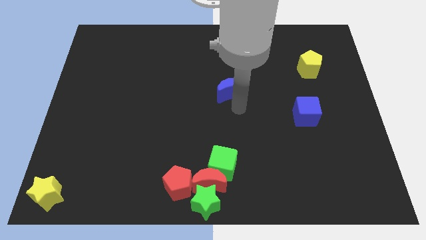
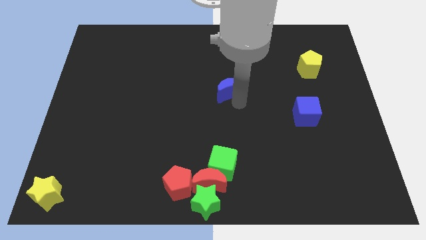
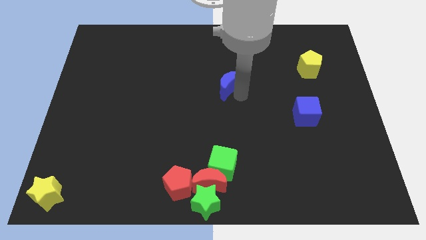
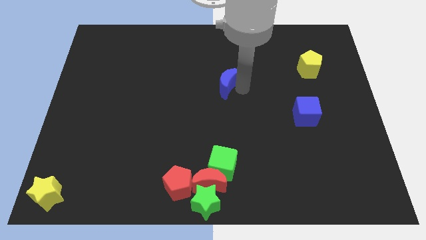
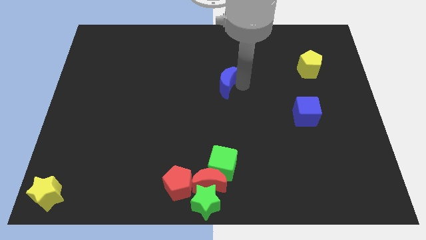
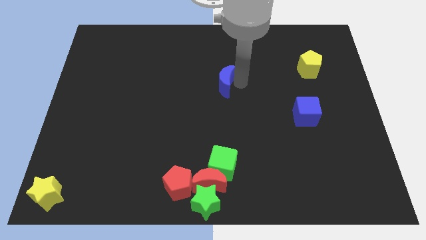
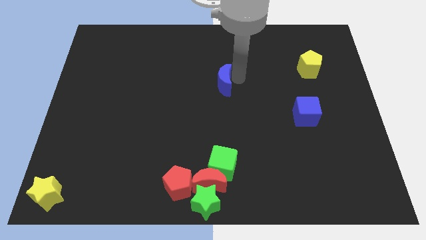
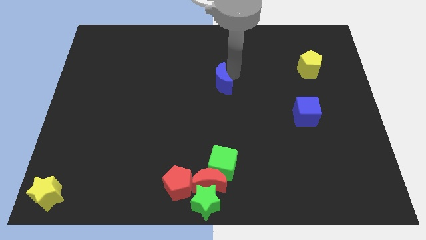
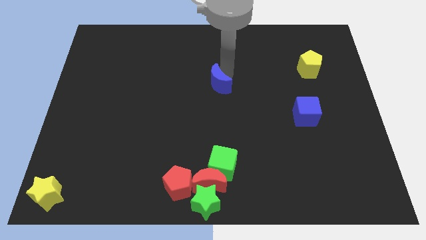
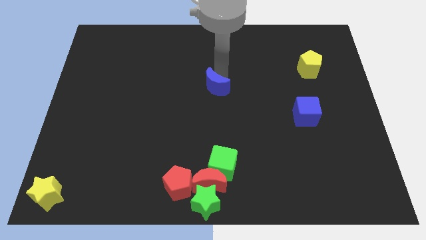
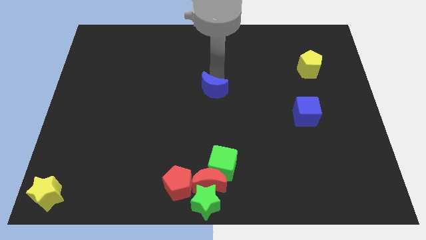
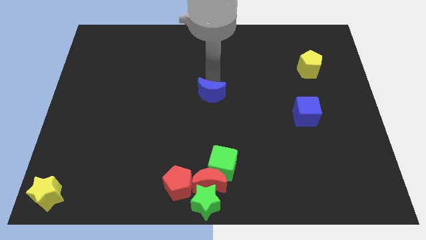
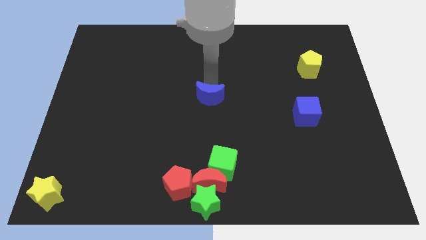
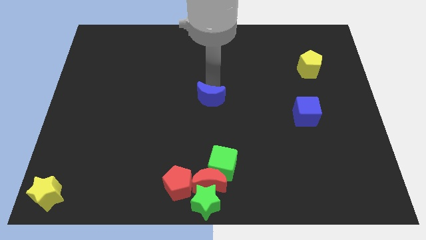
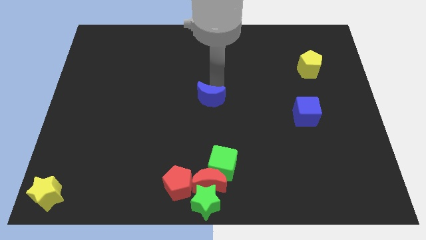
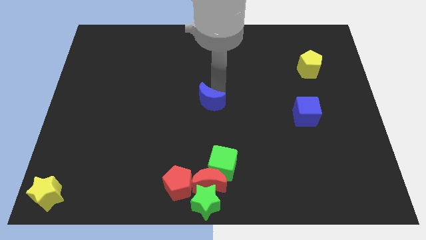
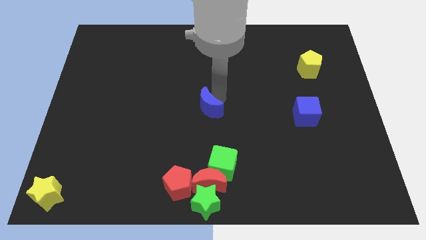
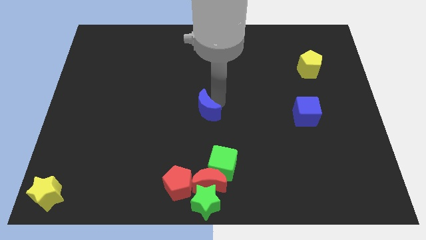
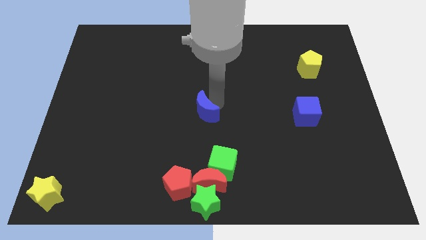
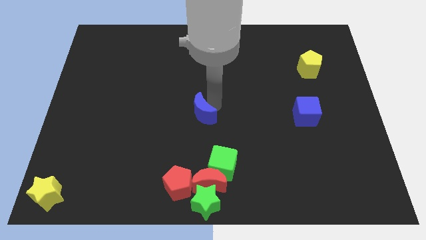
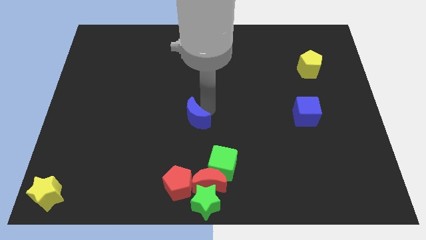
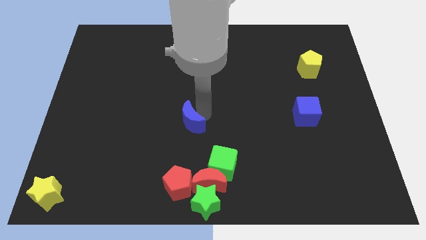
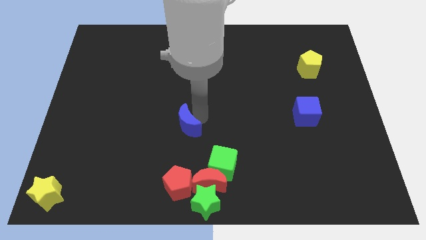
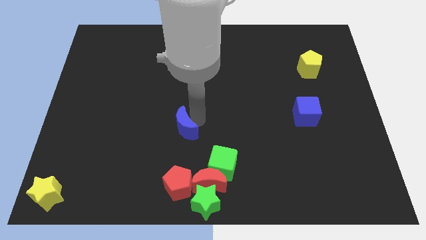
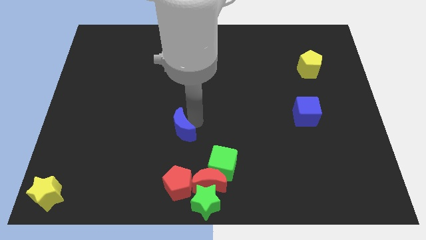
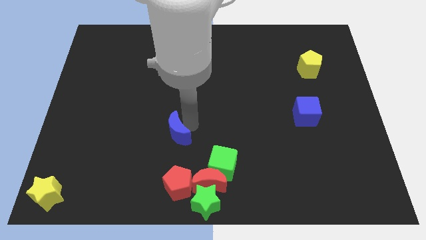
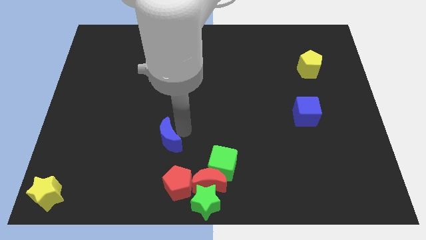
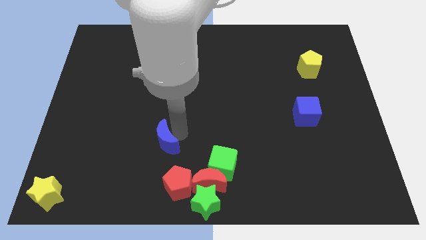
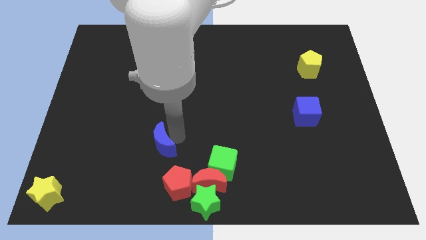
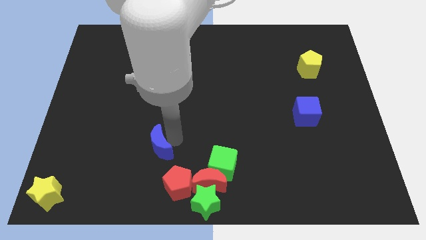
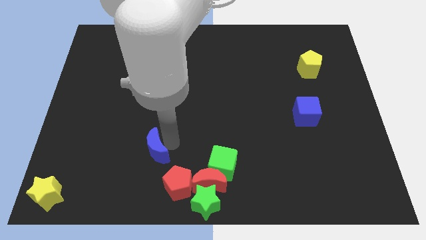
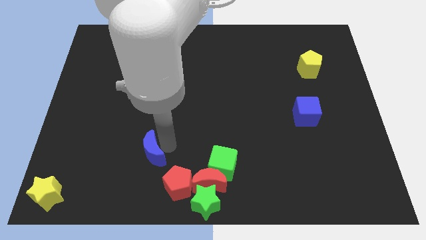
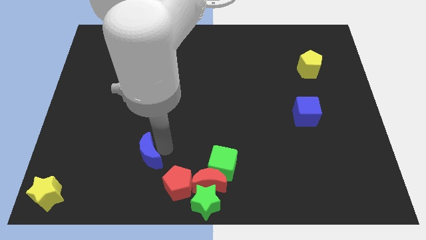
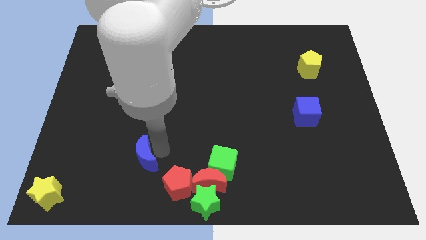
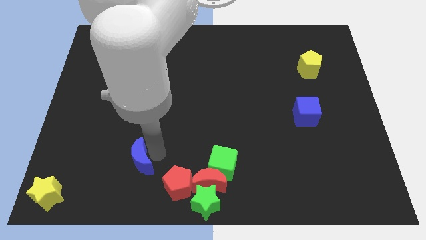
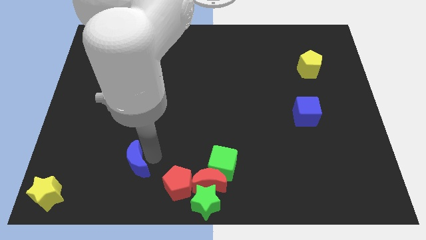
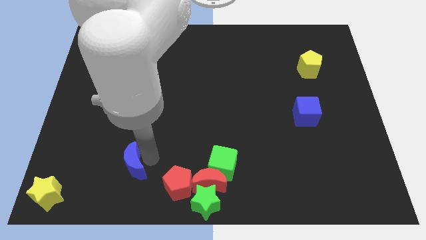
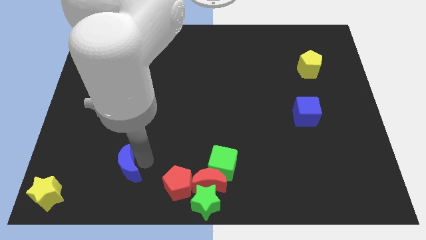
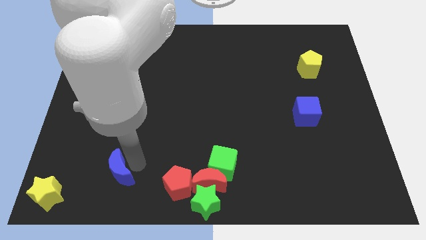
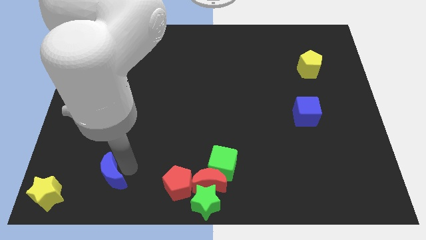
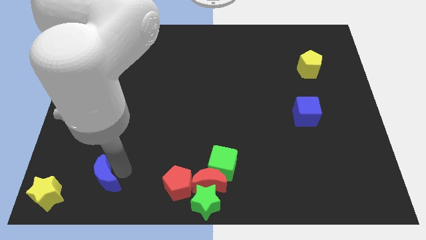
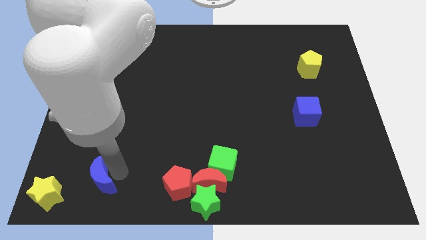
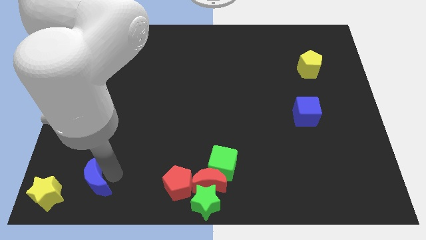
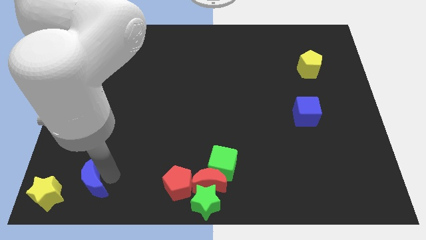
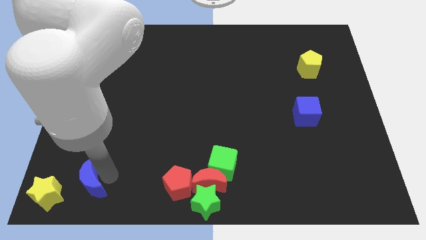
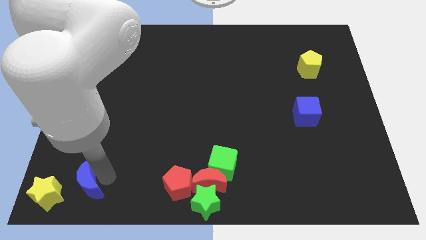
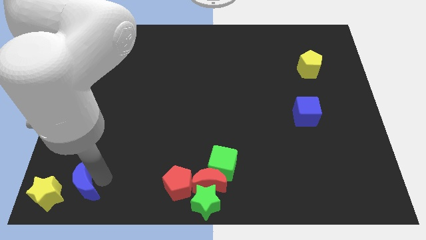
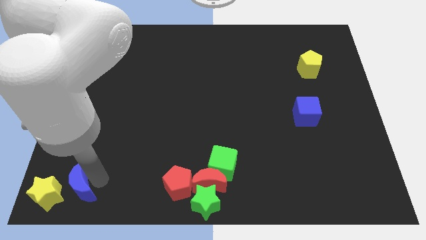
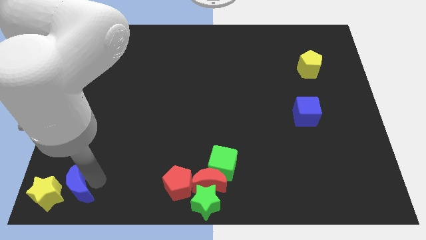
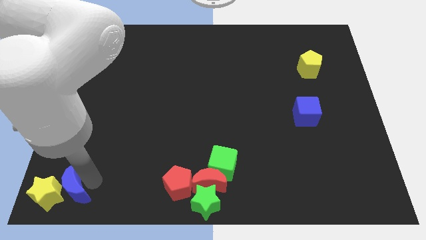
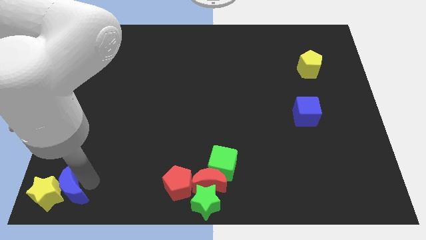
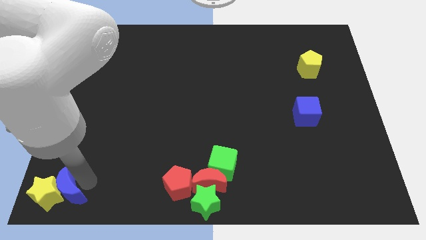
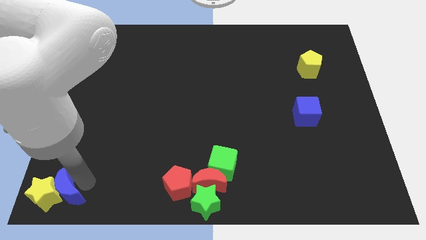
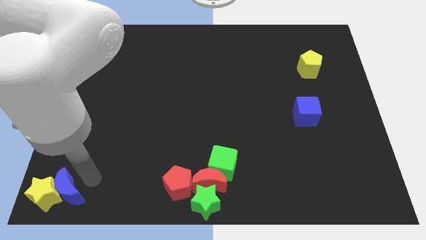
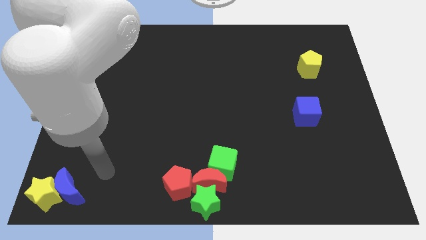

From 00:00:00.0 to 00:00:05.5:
move the blue crescent to the right of the yellow star

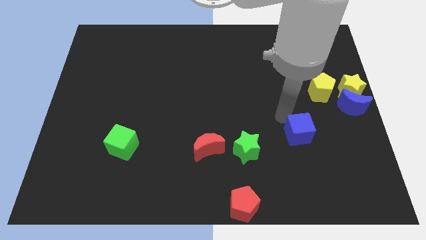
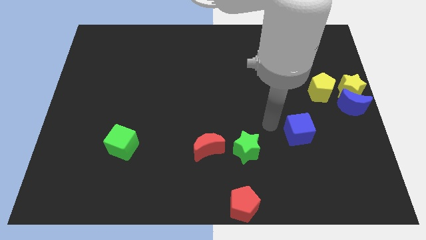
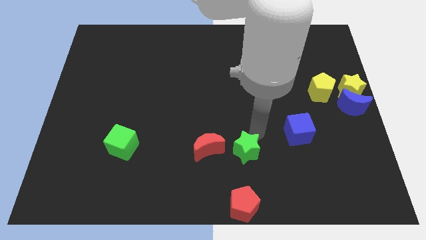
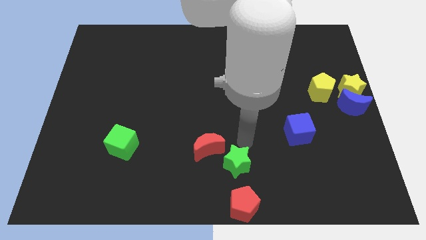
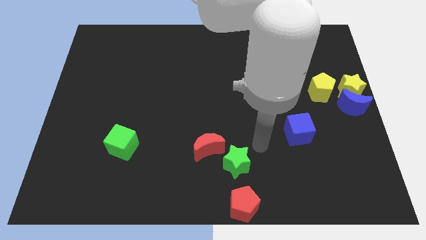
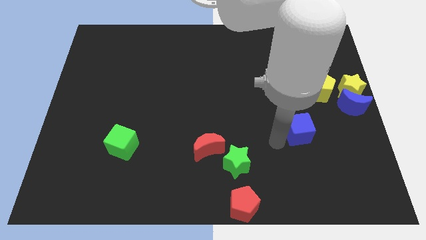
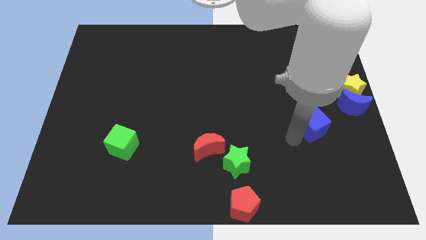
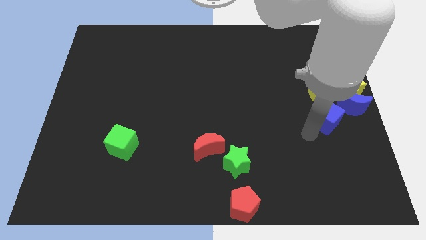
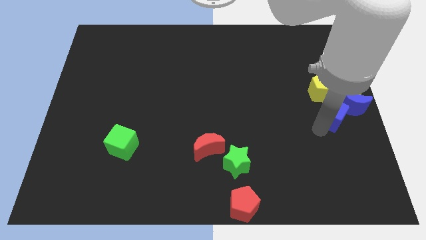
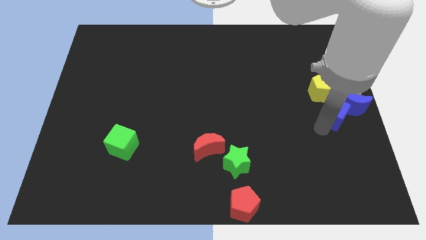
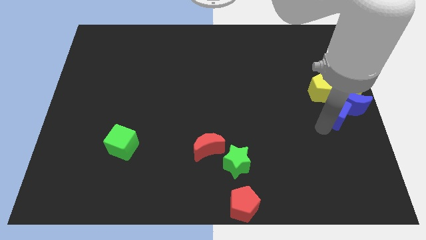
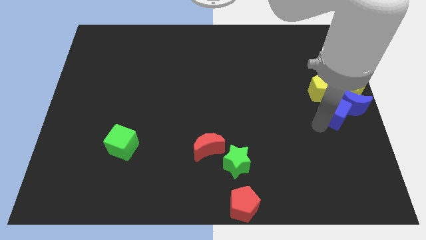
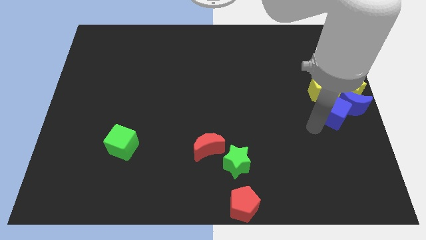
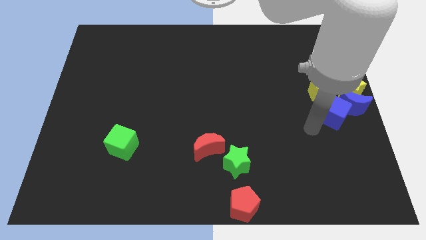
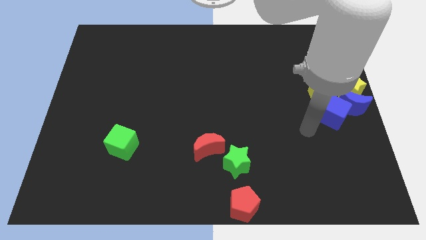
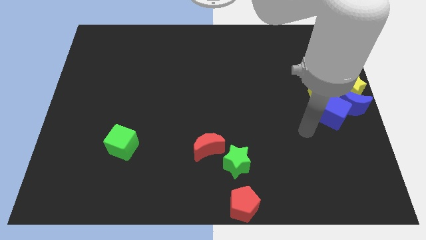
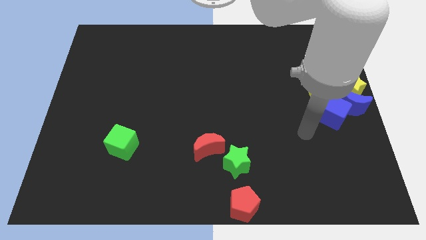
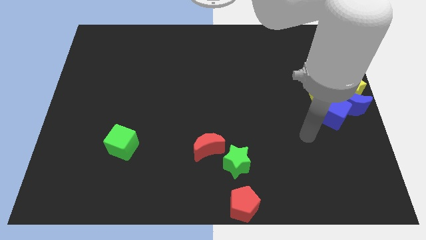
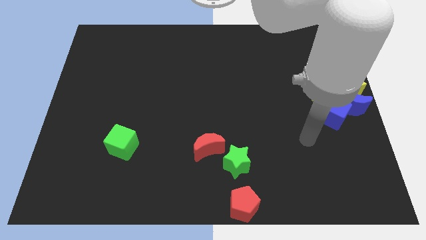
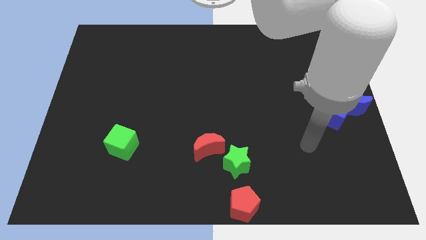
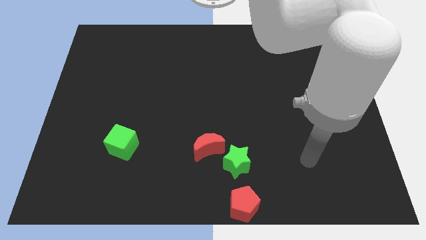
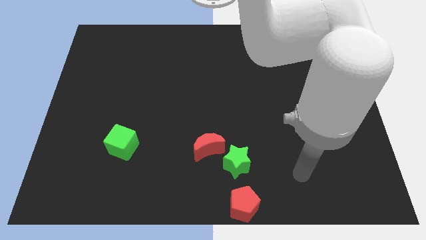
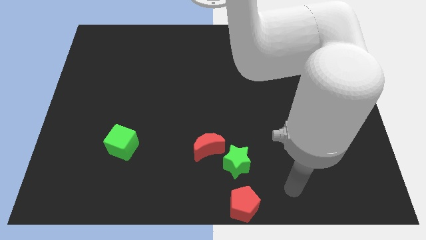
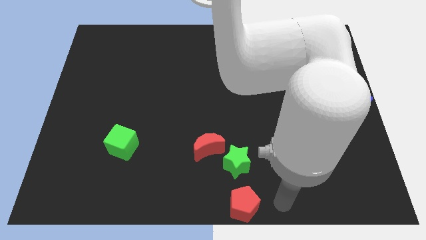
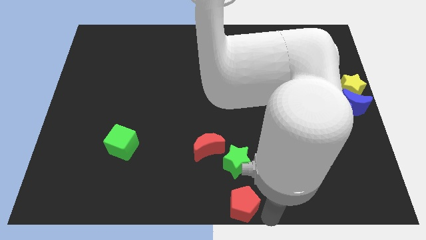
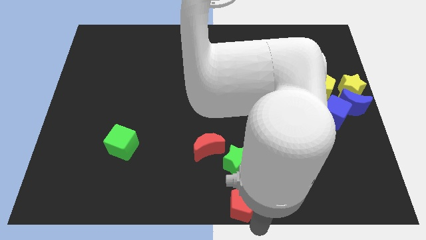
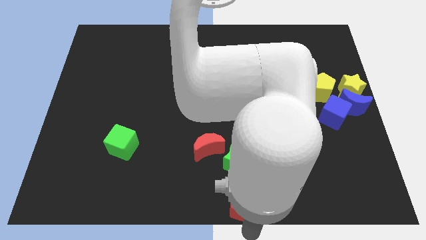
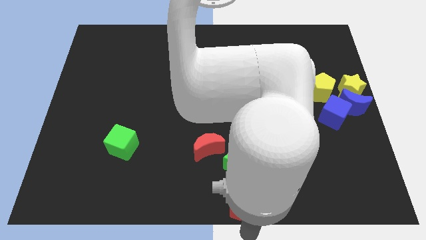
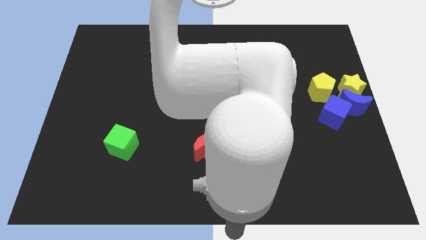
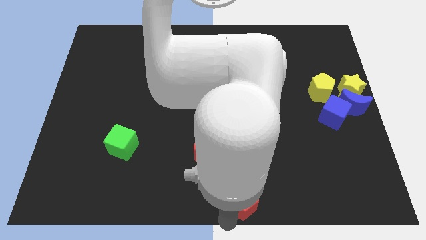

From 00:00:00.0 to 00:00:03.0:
move the blue cube close to the blue moon

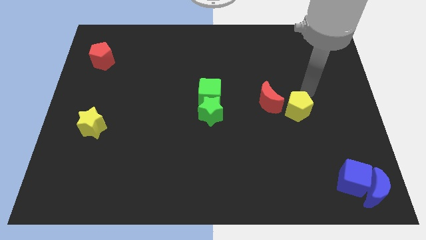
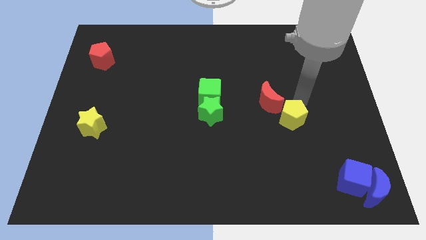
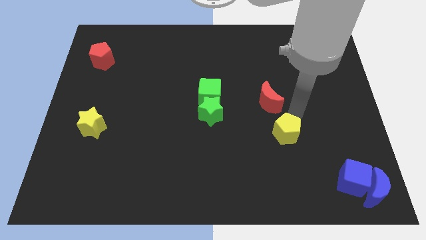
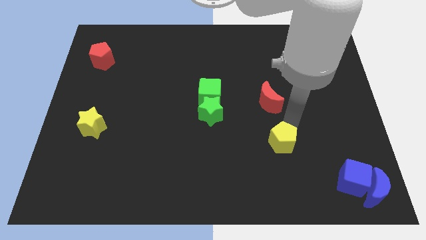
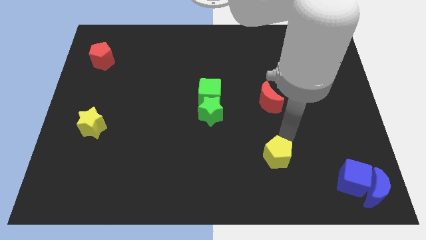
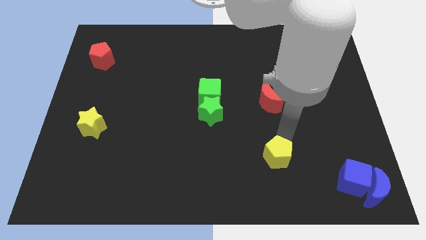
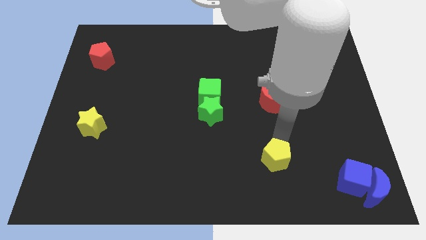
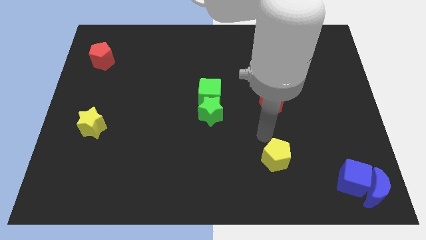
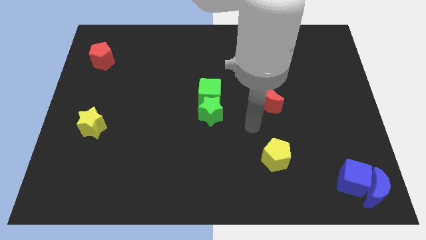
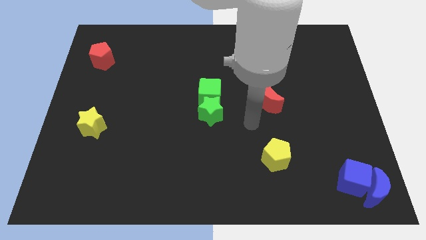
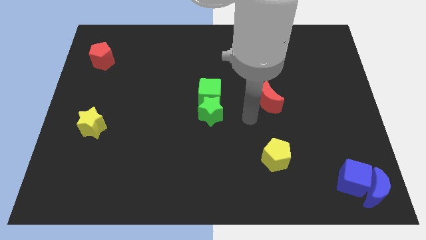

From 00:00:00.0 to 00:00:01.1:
move the yellow pentagon vertically bottom to the red crescent
